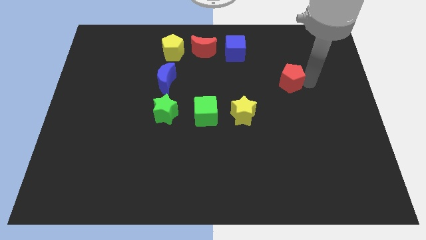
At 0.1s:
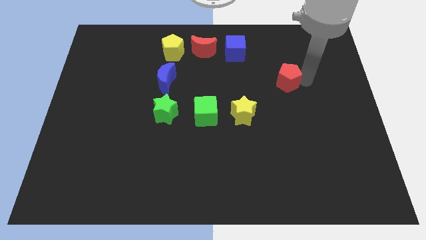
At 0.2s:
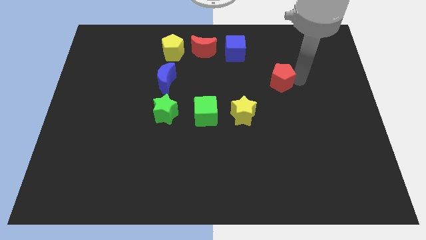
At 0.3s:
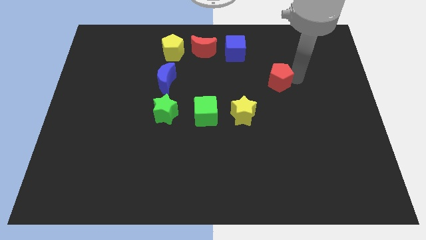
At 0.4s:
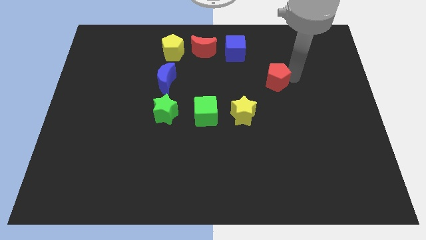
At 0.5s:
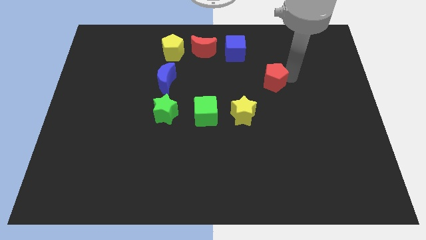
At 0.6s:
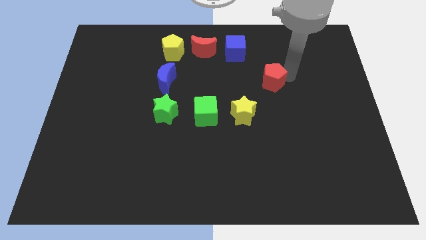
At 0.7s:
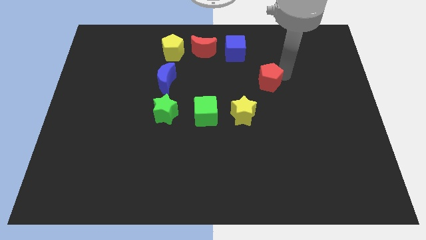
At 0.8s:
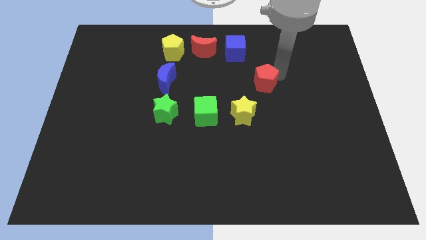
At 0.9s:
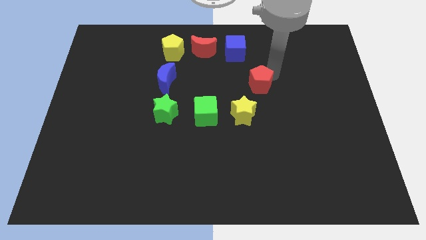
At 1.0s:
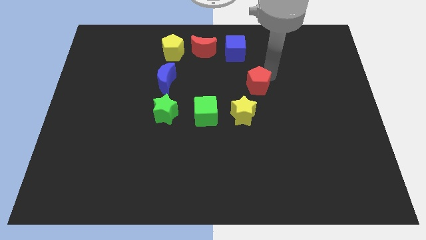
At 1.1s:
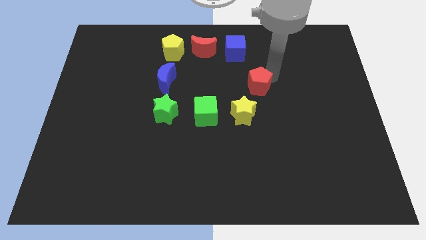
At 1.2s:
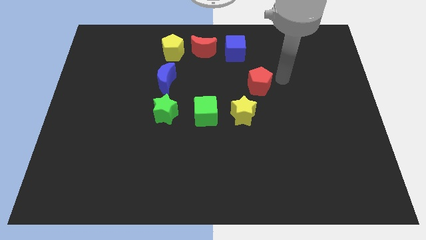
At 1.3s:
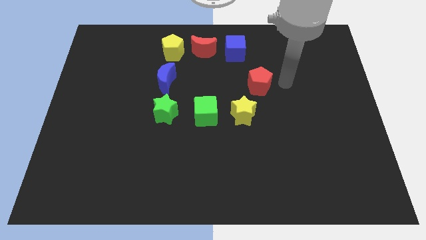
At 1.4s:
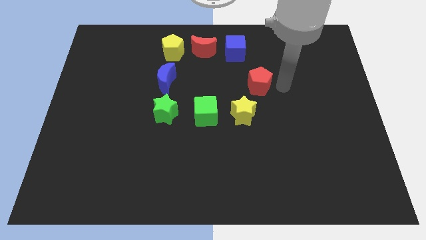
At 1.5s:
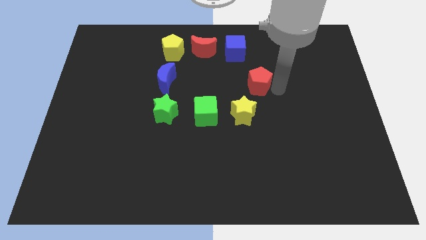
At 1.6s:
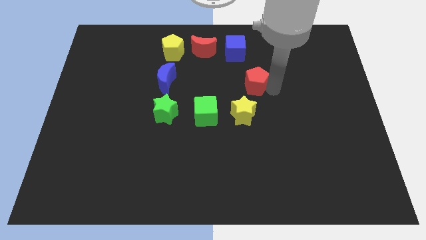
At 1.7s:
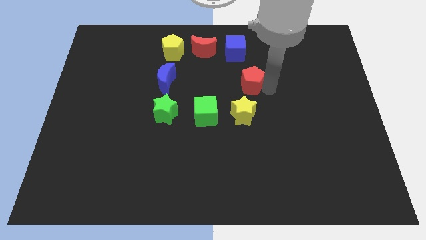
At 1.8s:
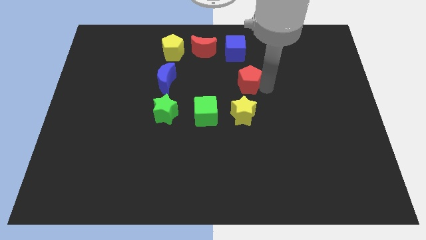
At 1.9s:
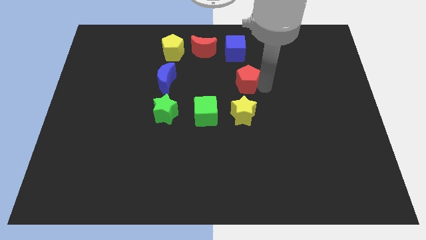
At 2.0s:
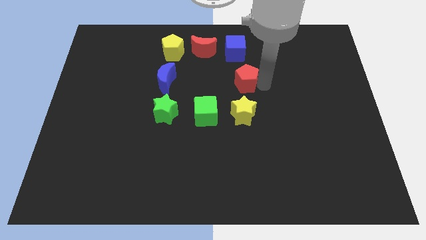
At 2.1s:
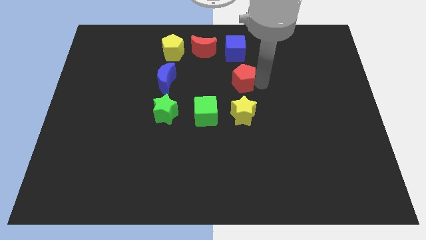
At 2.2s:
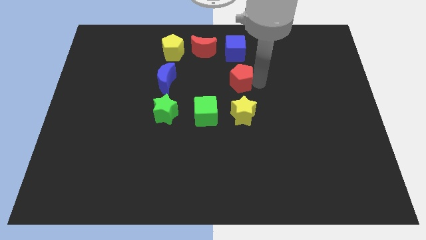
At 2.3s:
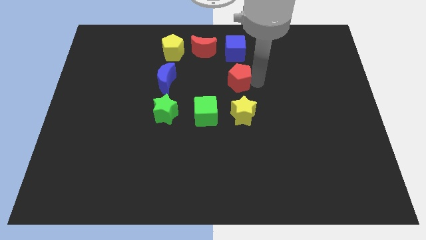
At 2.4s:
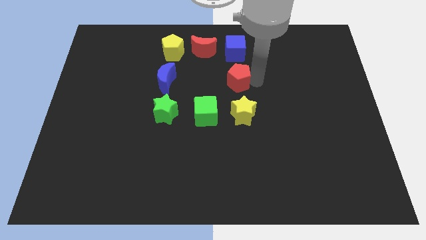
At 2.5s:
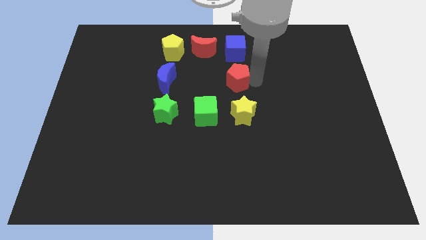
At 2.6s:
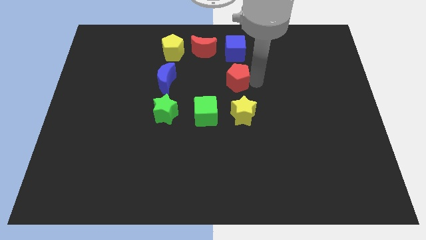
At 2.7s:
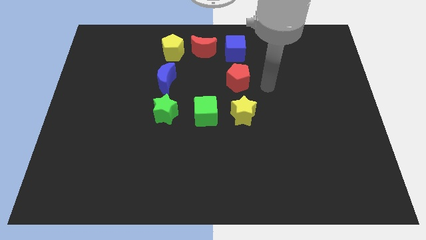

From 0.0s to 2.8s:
move the red pentagon to the bottom of the blue cube

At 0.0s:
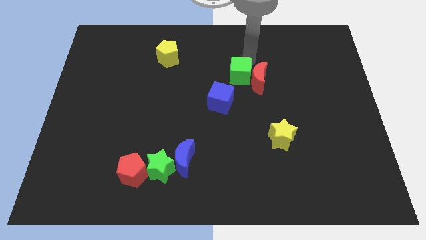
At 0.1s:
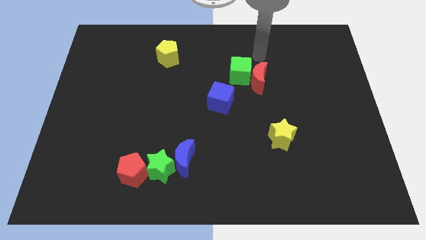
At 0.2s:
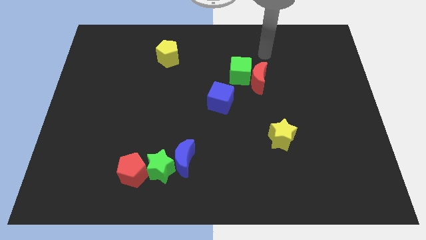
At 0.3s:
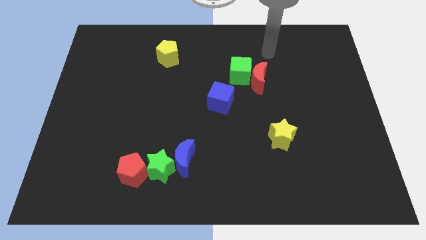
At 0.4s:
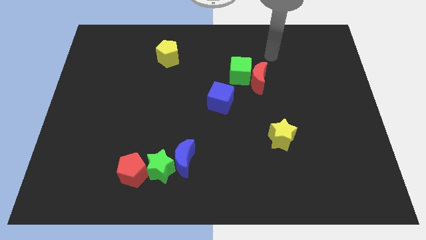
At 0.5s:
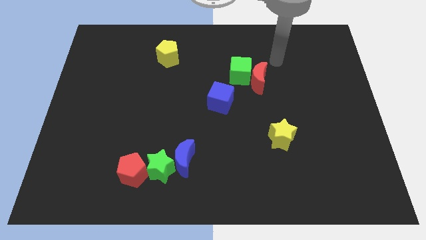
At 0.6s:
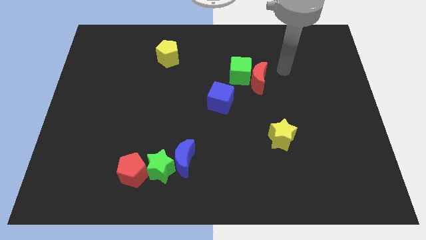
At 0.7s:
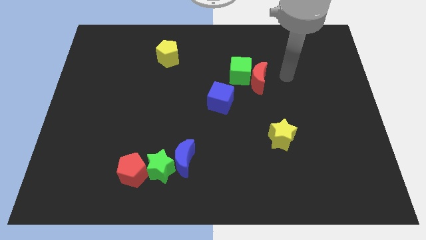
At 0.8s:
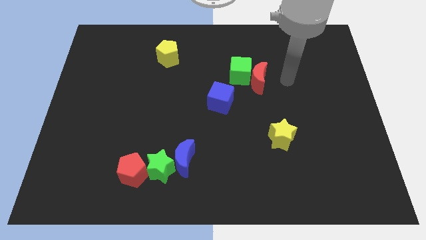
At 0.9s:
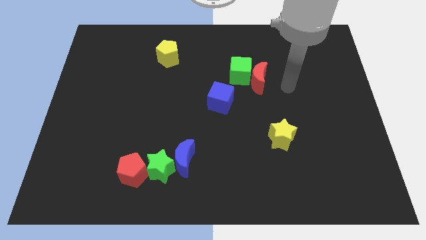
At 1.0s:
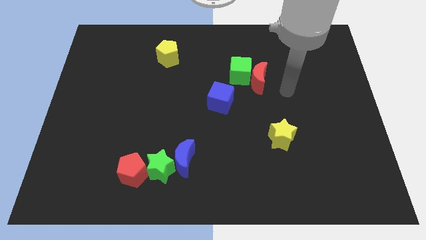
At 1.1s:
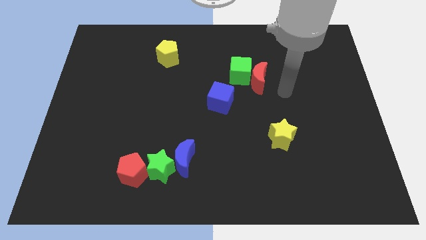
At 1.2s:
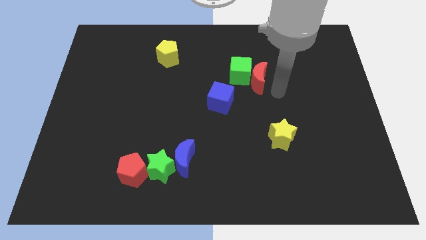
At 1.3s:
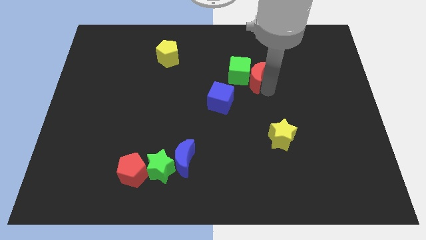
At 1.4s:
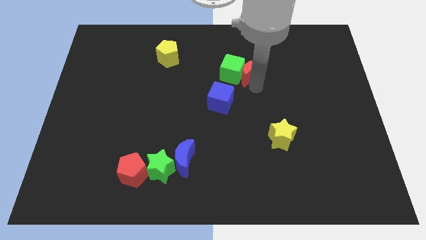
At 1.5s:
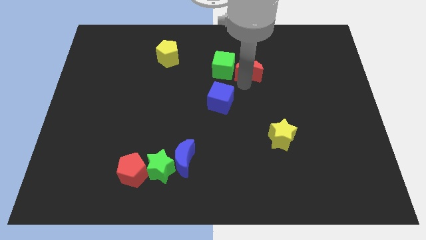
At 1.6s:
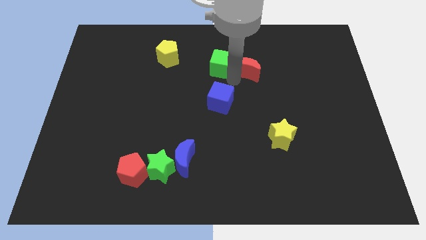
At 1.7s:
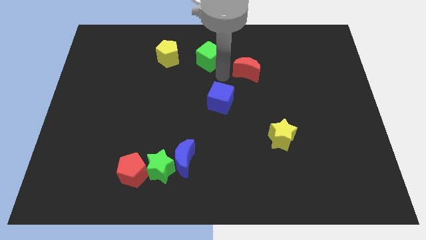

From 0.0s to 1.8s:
place your arm in the middle of three blocks

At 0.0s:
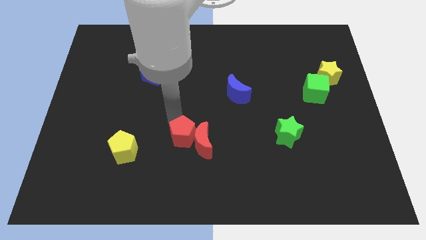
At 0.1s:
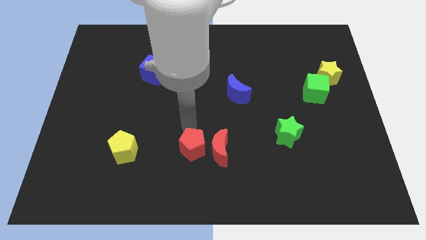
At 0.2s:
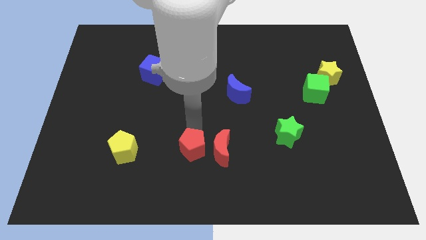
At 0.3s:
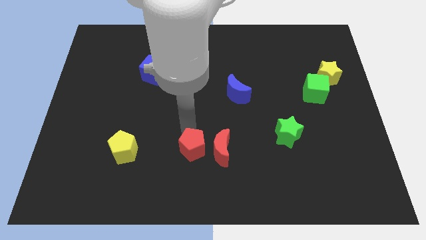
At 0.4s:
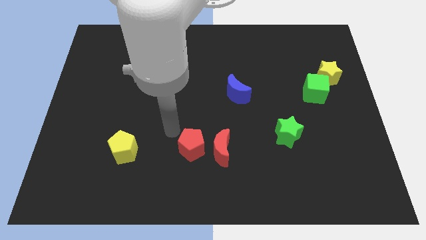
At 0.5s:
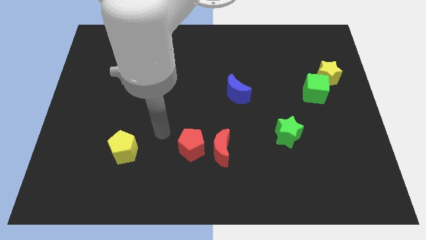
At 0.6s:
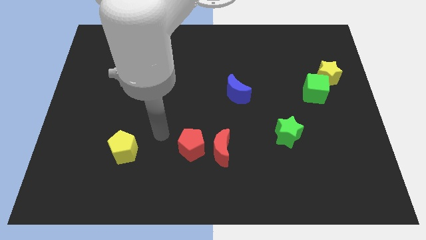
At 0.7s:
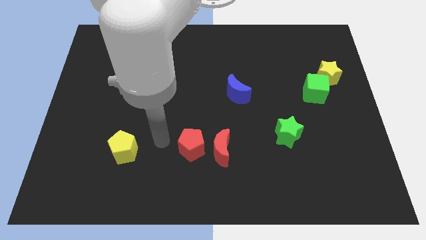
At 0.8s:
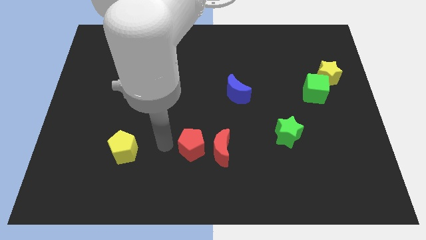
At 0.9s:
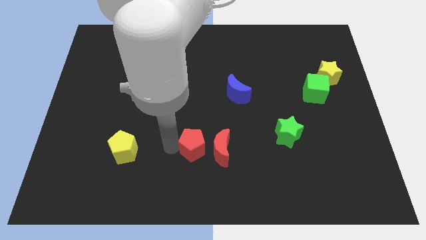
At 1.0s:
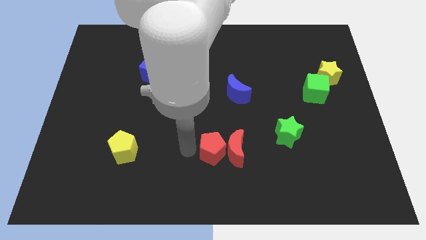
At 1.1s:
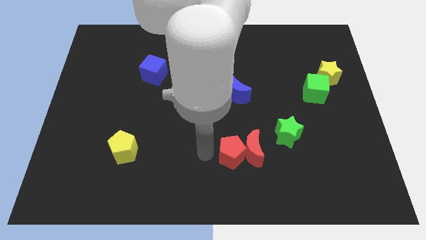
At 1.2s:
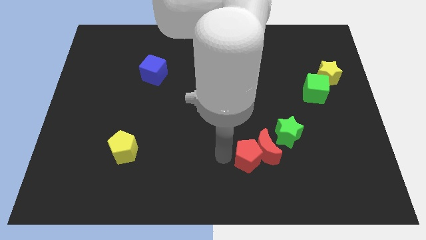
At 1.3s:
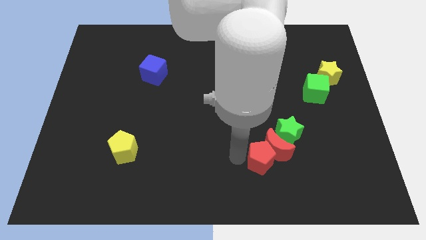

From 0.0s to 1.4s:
push the red pentagon into red crescent

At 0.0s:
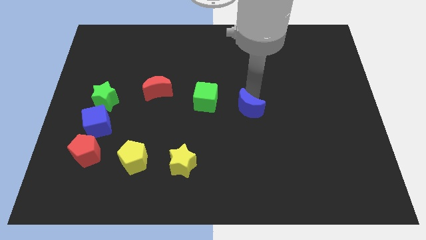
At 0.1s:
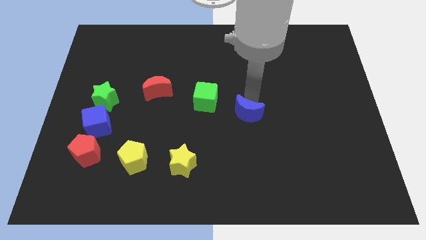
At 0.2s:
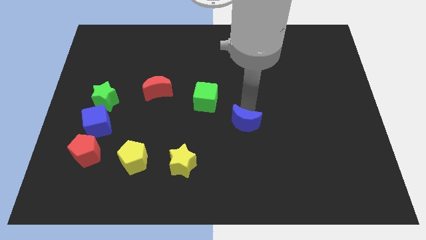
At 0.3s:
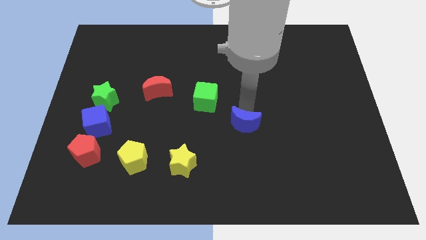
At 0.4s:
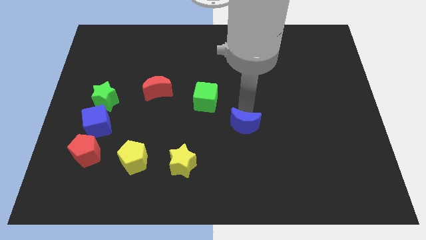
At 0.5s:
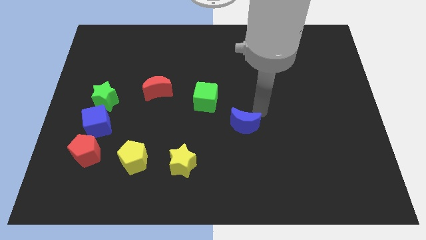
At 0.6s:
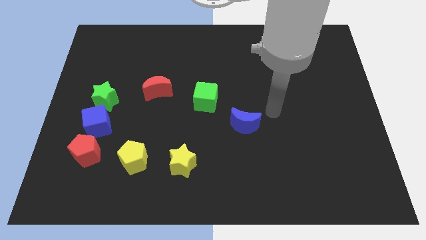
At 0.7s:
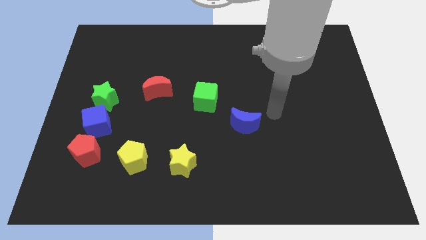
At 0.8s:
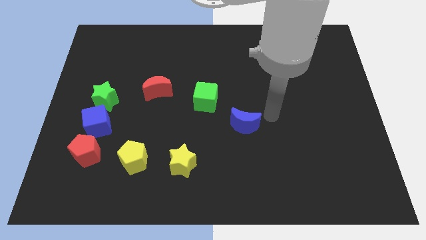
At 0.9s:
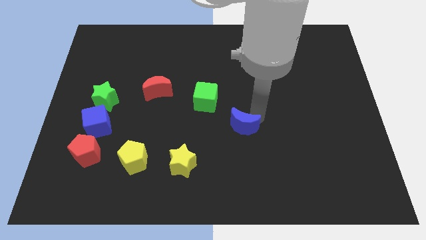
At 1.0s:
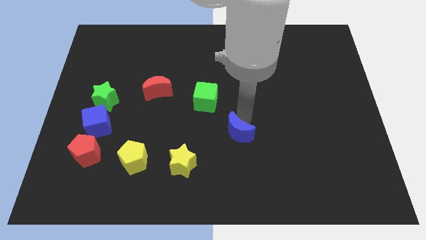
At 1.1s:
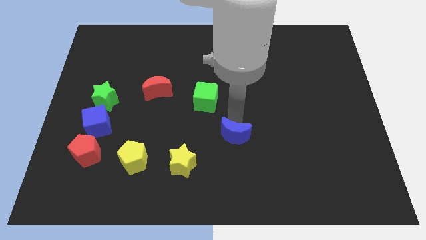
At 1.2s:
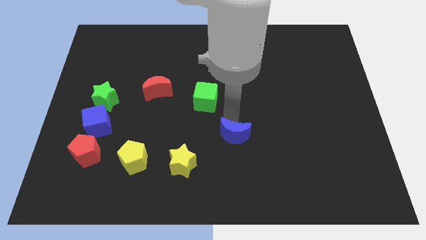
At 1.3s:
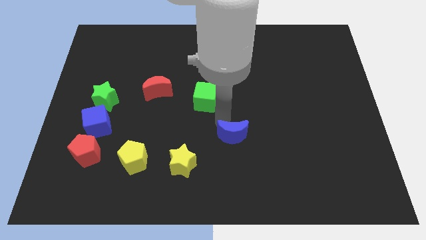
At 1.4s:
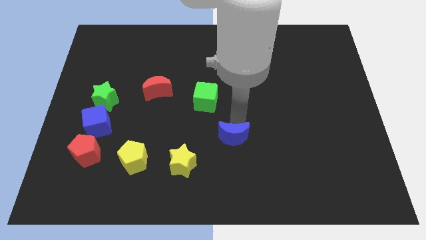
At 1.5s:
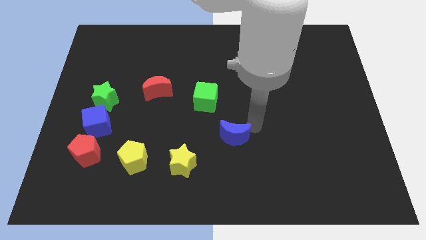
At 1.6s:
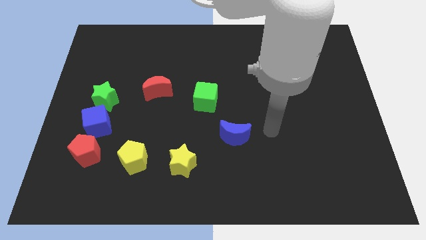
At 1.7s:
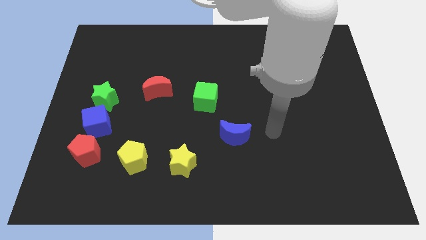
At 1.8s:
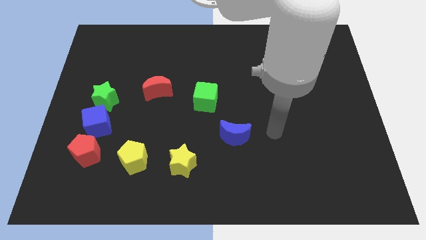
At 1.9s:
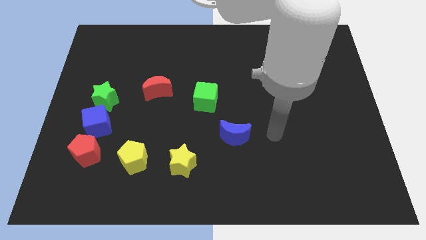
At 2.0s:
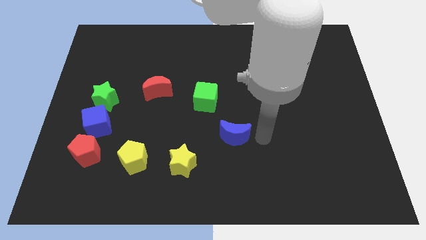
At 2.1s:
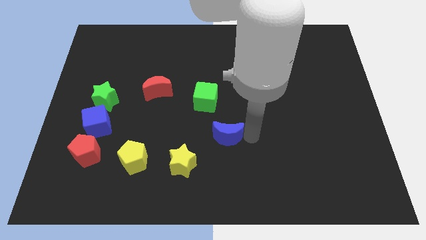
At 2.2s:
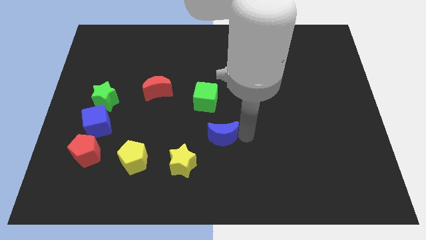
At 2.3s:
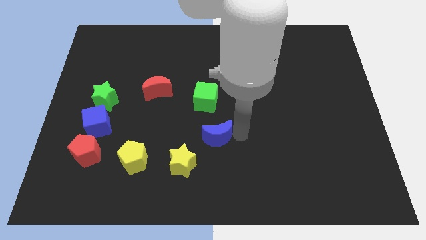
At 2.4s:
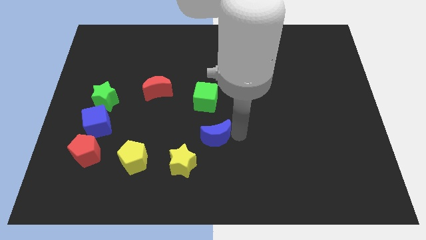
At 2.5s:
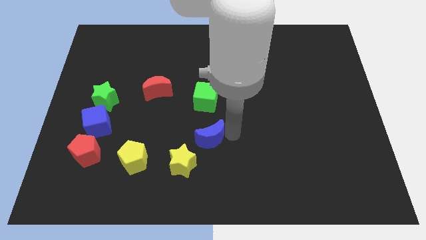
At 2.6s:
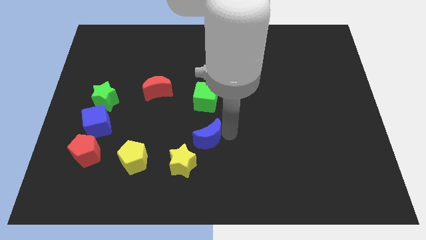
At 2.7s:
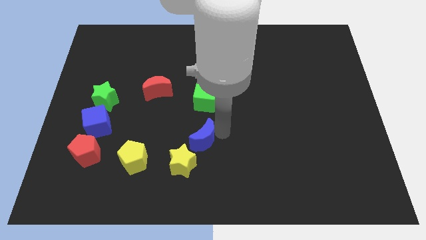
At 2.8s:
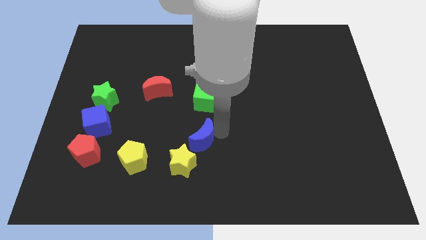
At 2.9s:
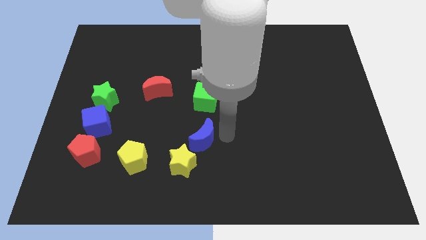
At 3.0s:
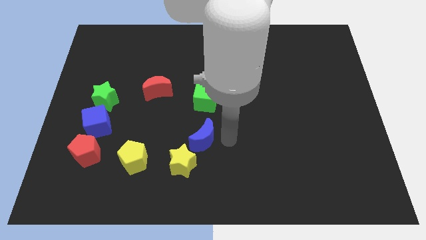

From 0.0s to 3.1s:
move the blue moon in between the green cube and yellow star
